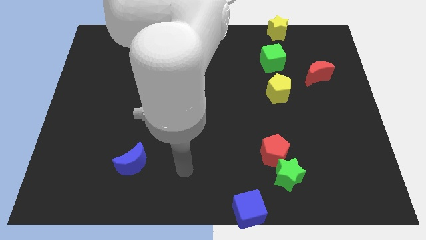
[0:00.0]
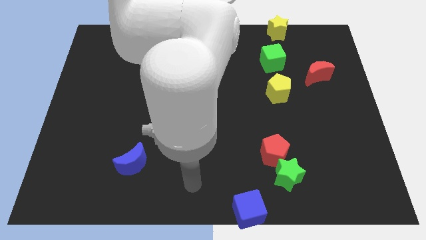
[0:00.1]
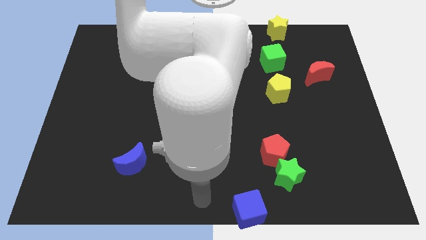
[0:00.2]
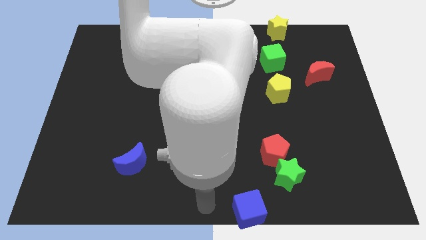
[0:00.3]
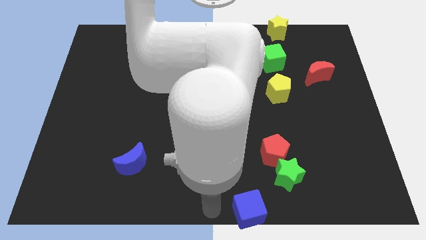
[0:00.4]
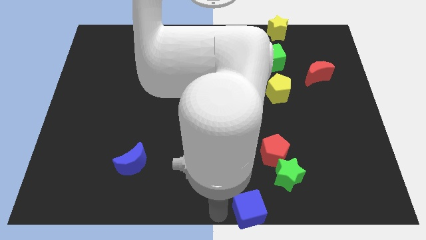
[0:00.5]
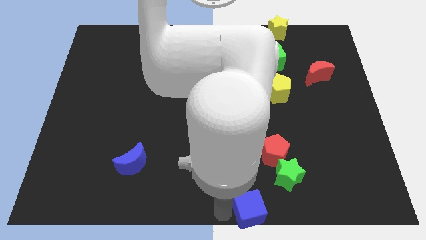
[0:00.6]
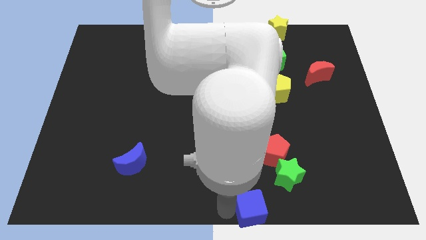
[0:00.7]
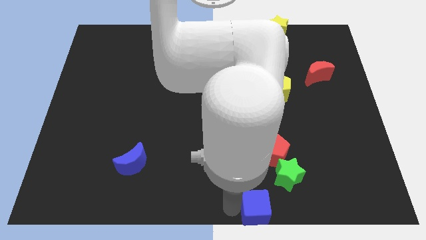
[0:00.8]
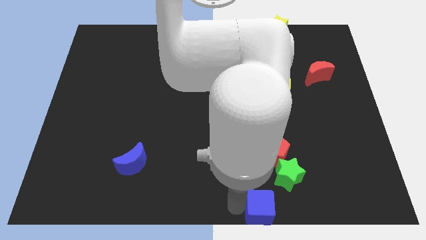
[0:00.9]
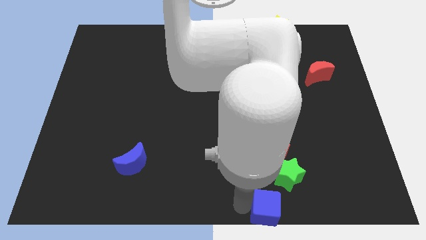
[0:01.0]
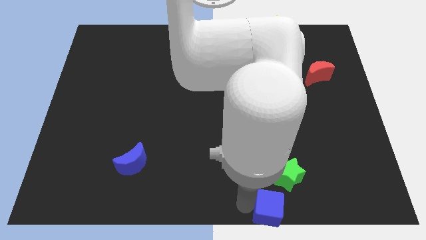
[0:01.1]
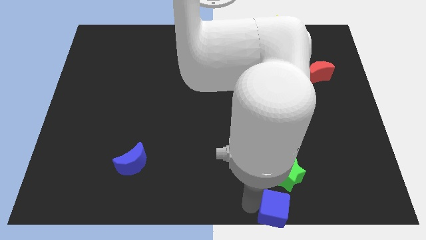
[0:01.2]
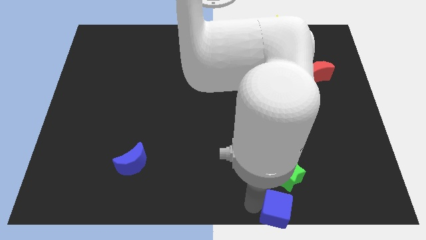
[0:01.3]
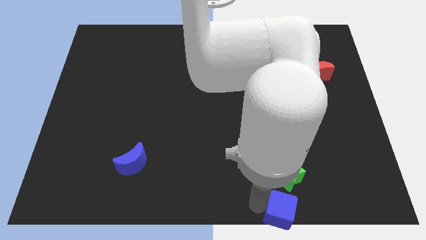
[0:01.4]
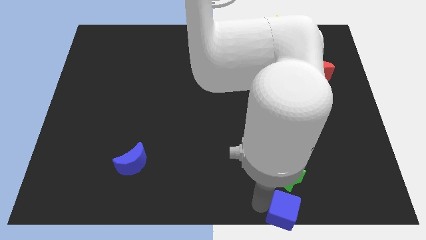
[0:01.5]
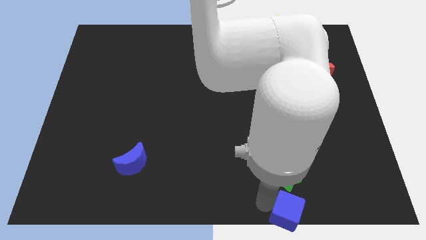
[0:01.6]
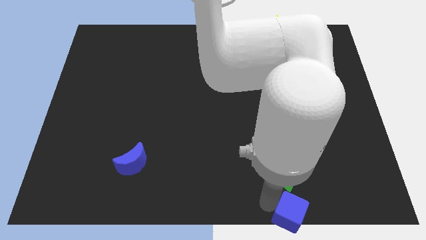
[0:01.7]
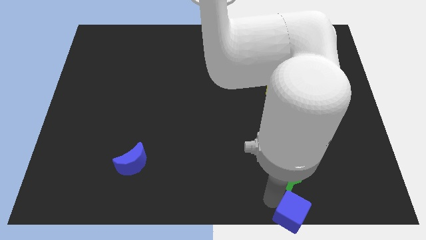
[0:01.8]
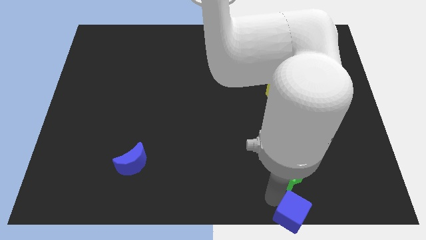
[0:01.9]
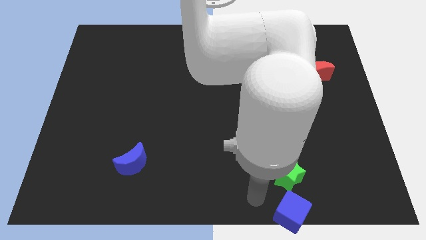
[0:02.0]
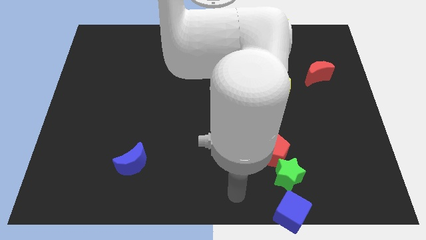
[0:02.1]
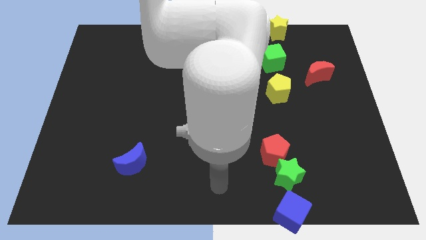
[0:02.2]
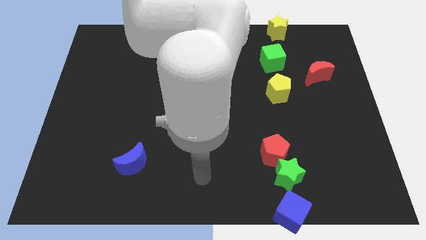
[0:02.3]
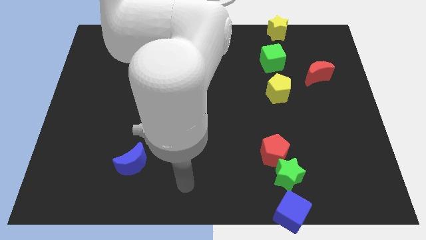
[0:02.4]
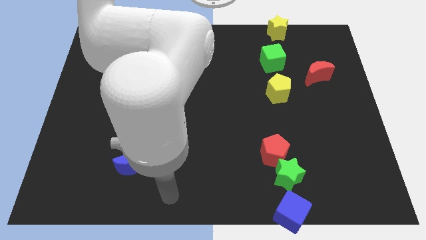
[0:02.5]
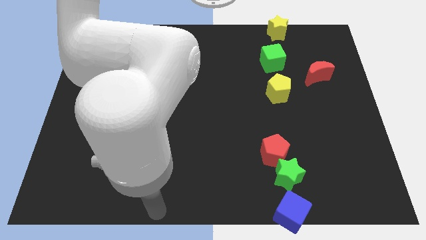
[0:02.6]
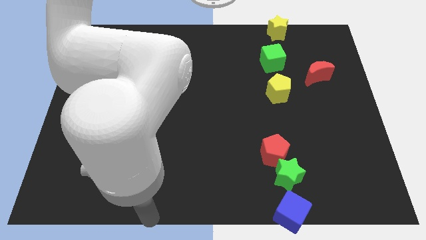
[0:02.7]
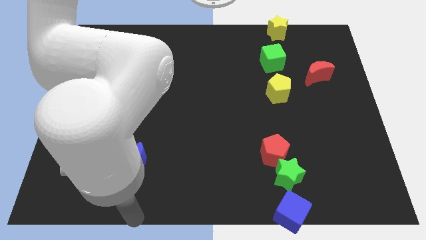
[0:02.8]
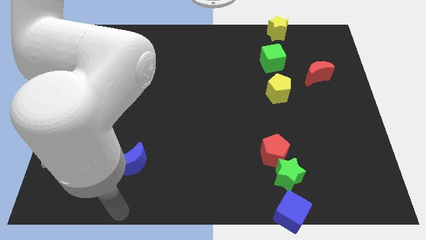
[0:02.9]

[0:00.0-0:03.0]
move the blue cube below the green star

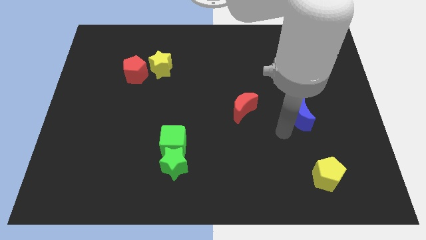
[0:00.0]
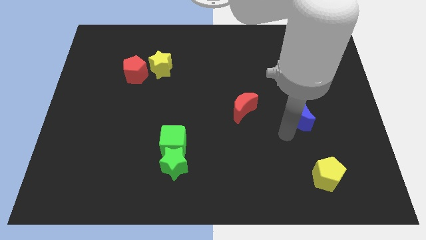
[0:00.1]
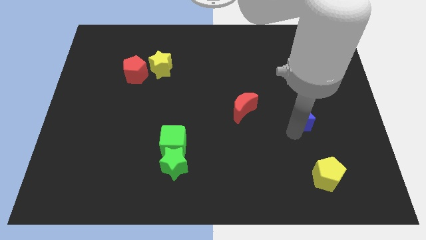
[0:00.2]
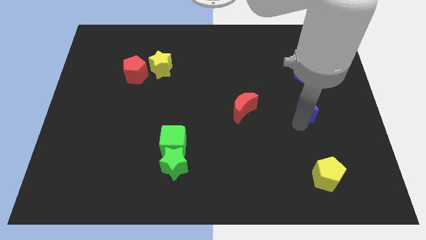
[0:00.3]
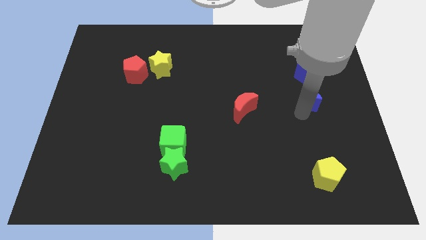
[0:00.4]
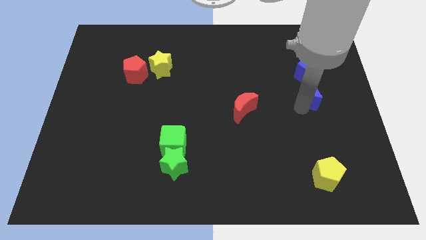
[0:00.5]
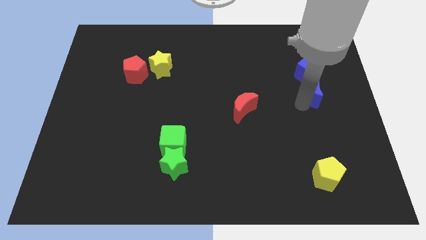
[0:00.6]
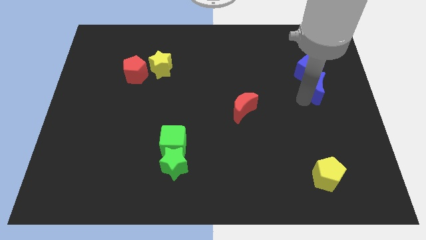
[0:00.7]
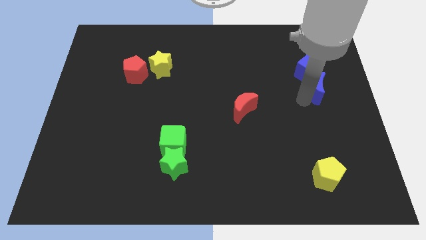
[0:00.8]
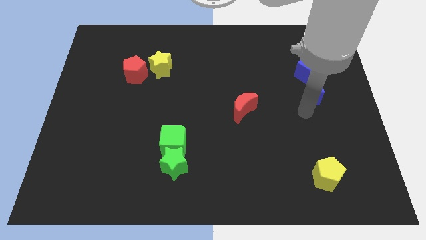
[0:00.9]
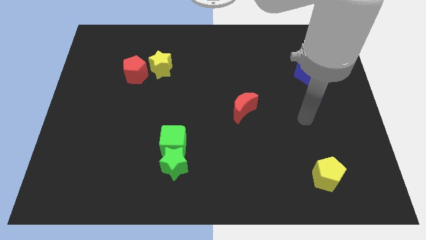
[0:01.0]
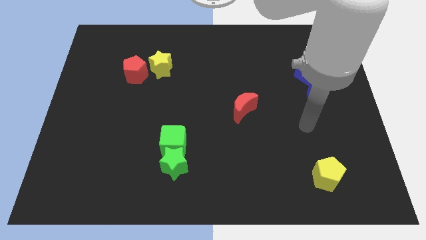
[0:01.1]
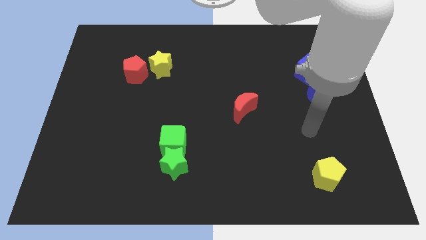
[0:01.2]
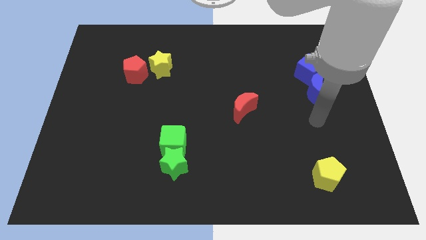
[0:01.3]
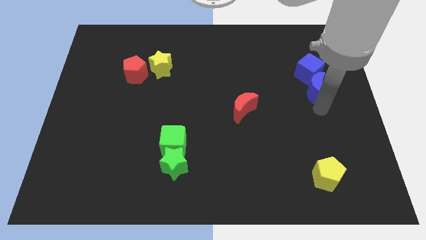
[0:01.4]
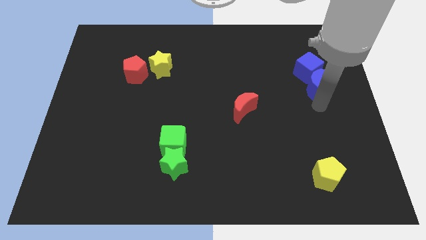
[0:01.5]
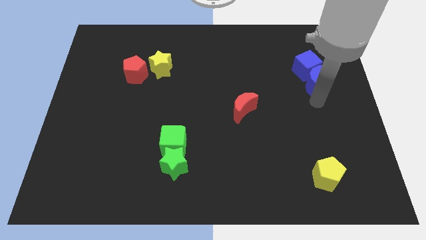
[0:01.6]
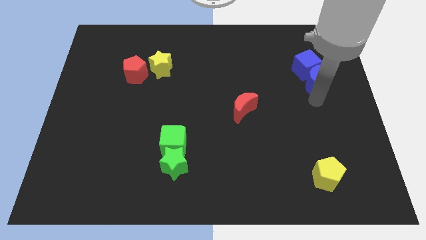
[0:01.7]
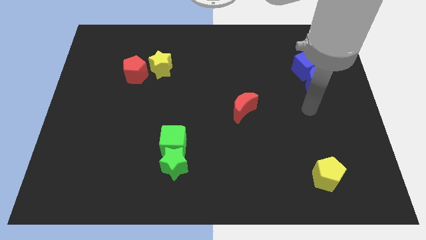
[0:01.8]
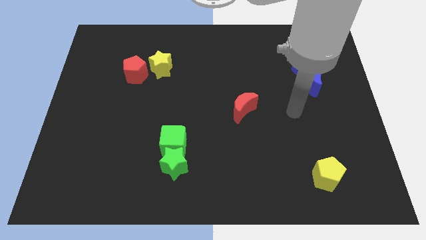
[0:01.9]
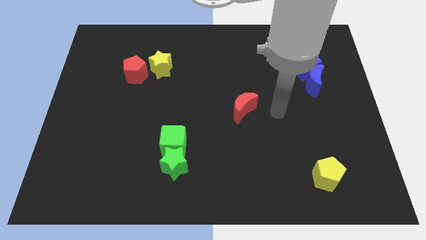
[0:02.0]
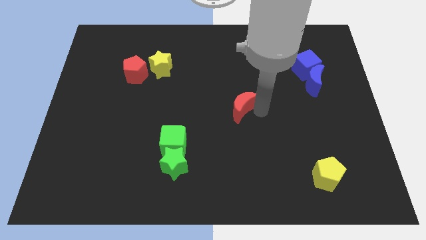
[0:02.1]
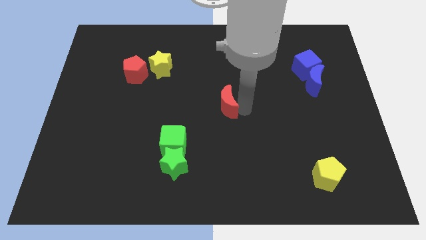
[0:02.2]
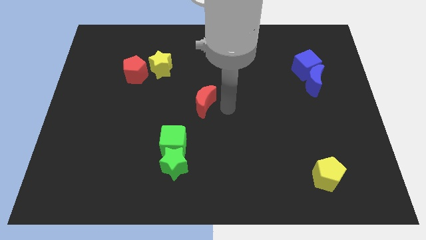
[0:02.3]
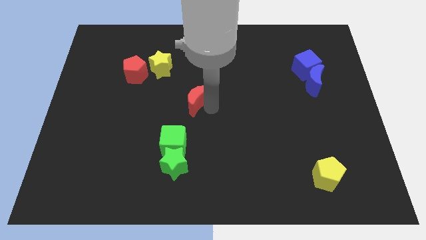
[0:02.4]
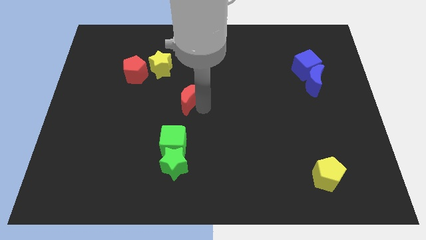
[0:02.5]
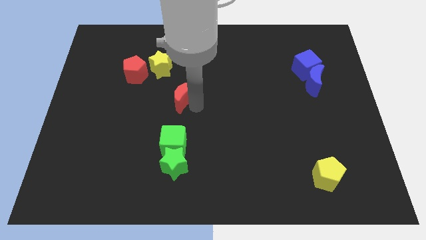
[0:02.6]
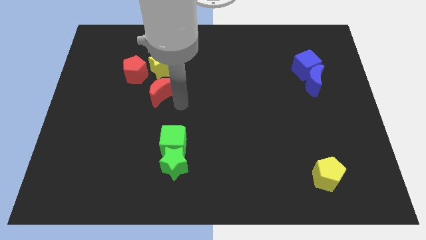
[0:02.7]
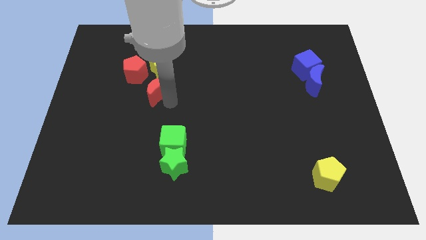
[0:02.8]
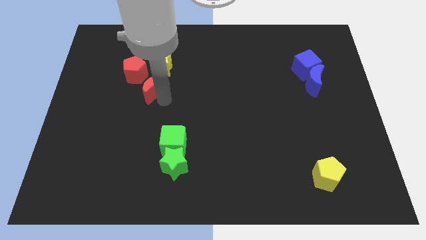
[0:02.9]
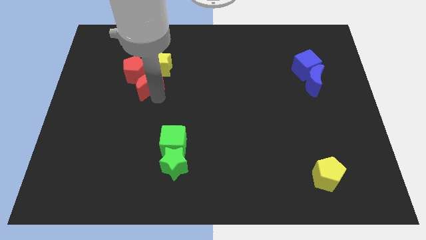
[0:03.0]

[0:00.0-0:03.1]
move the red crescent into the red pentagon

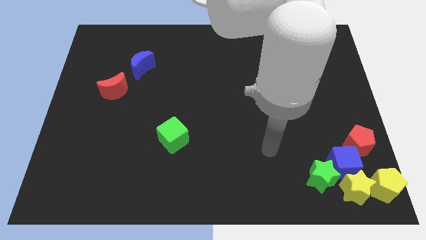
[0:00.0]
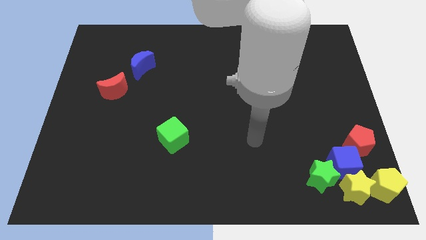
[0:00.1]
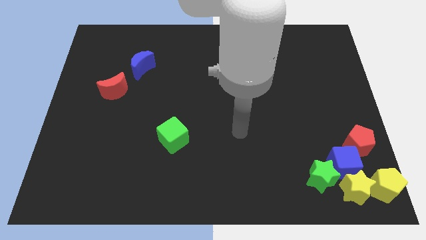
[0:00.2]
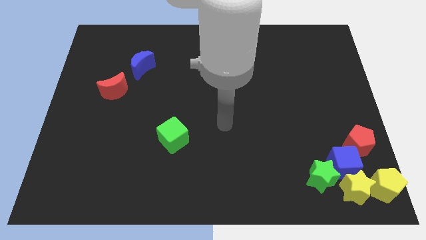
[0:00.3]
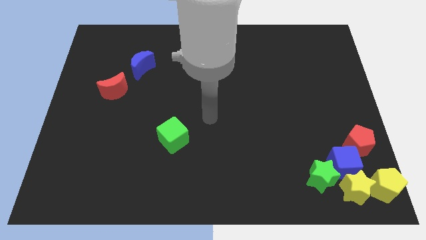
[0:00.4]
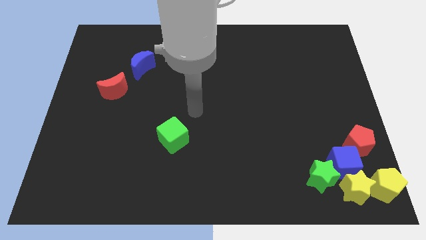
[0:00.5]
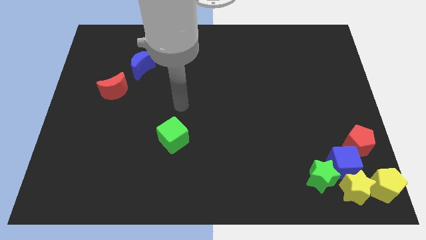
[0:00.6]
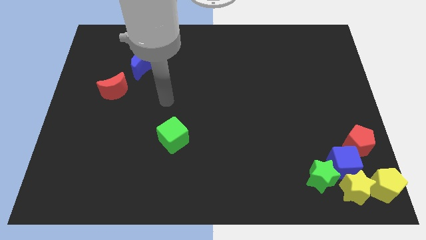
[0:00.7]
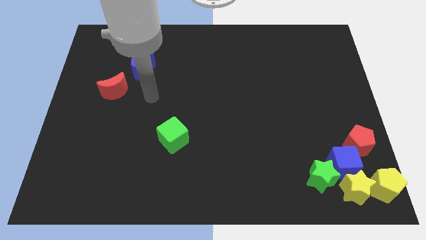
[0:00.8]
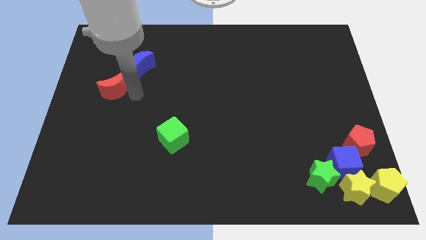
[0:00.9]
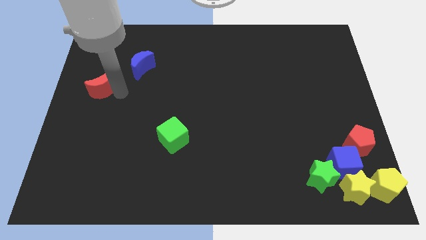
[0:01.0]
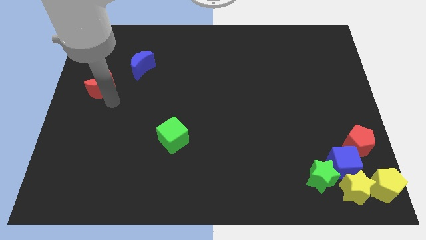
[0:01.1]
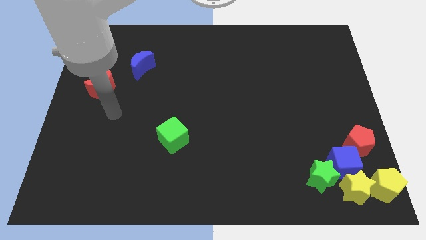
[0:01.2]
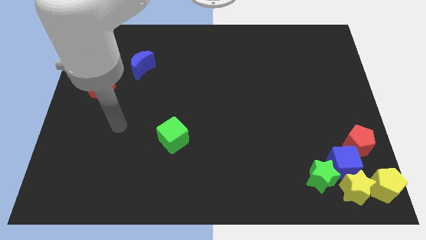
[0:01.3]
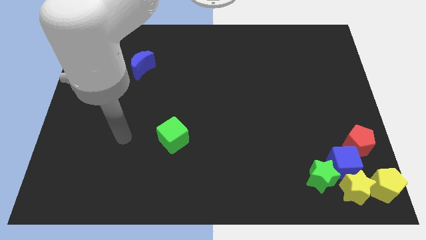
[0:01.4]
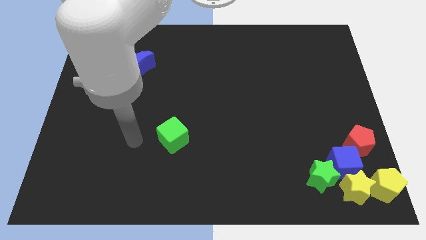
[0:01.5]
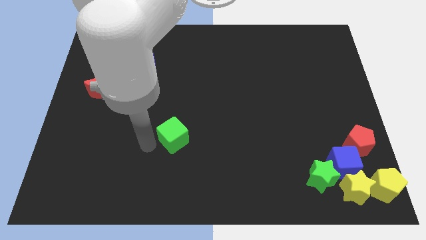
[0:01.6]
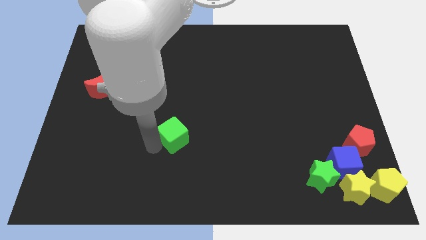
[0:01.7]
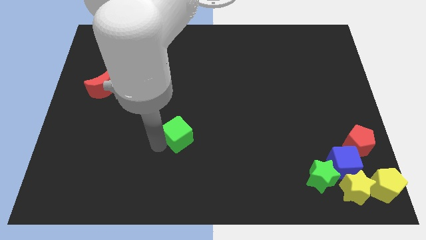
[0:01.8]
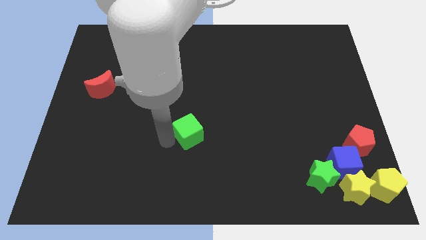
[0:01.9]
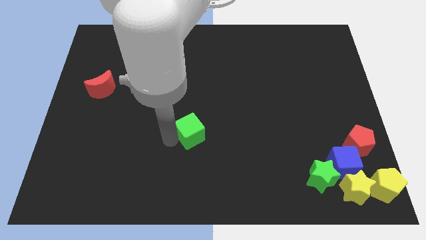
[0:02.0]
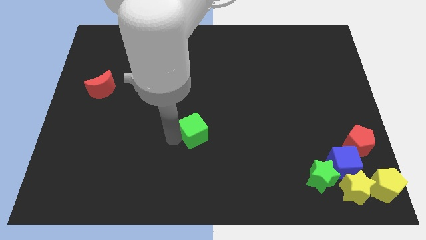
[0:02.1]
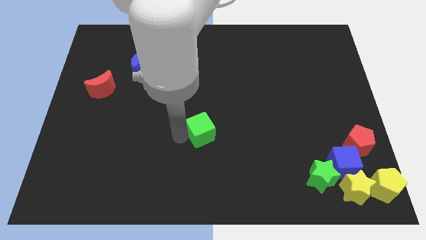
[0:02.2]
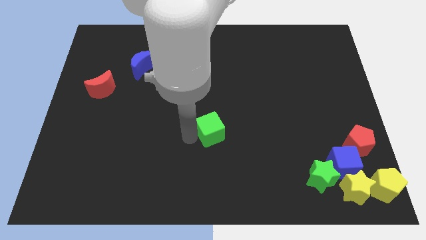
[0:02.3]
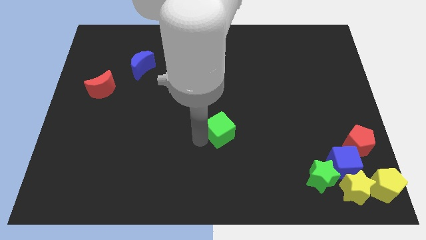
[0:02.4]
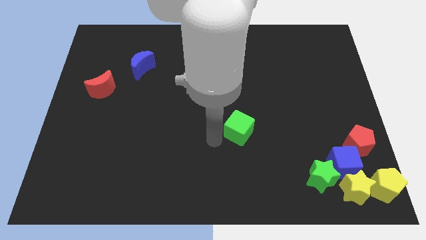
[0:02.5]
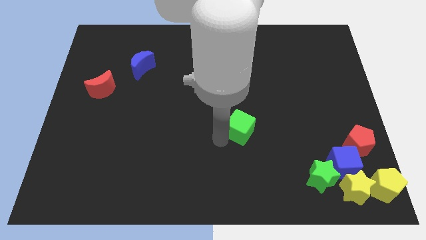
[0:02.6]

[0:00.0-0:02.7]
move the green cube and the red crescent in opposite directions

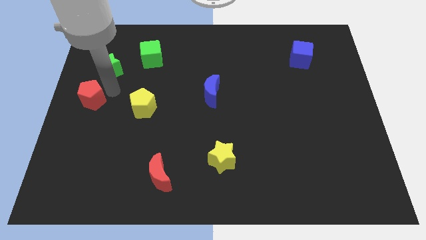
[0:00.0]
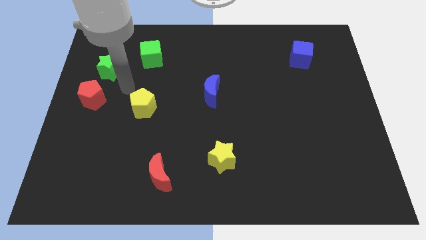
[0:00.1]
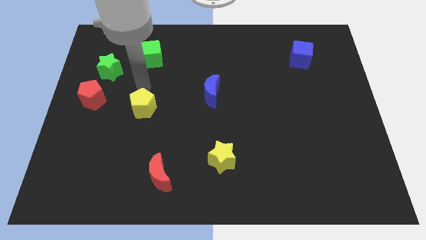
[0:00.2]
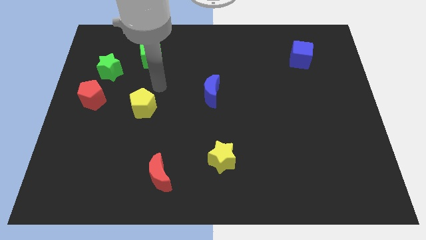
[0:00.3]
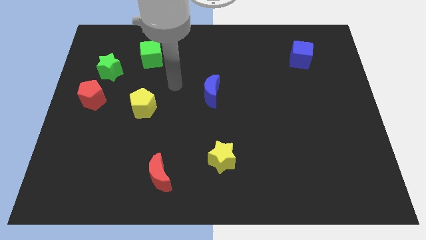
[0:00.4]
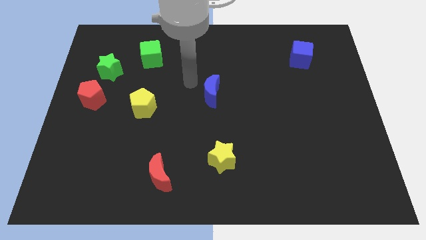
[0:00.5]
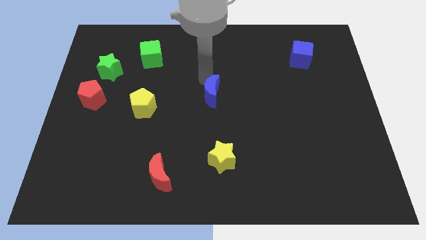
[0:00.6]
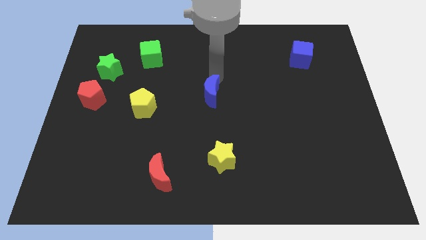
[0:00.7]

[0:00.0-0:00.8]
place your arm above blue cube
